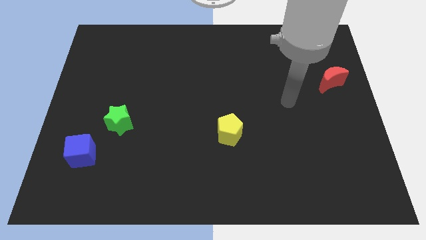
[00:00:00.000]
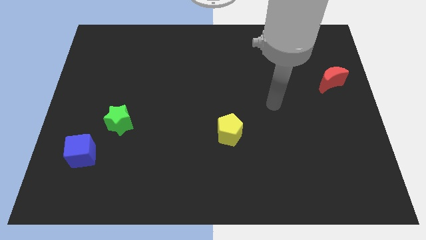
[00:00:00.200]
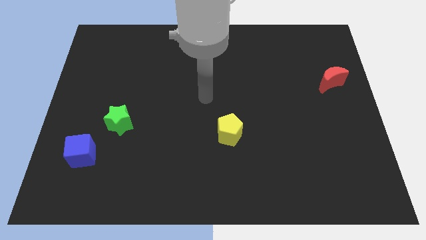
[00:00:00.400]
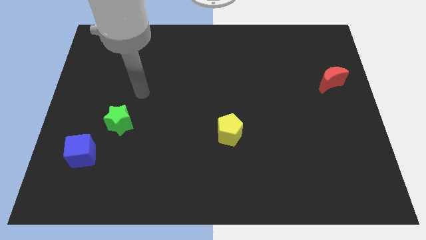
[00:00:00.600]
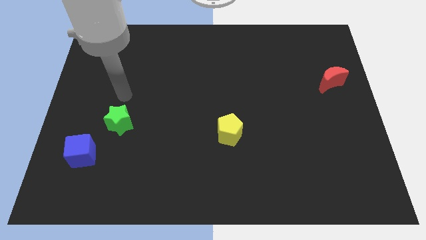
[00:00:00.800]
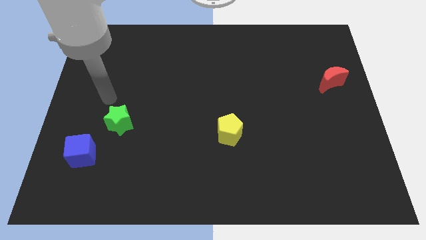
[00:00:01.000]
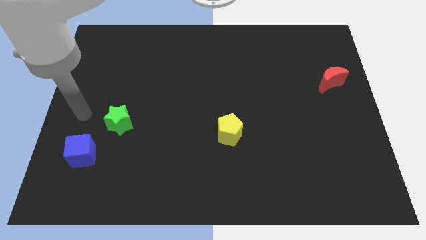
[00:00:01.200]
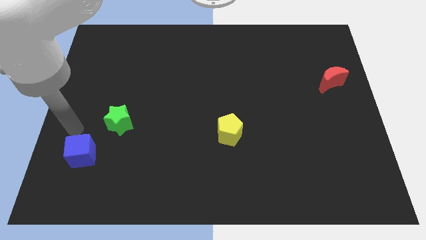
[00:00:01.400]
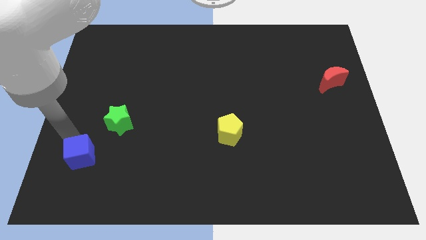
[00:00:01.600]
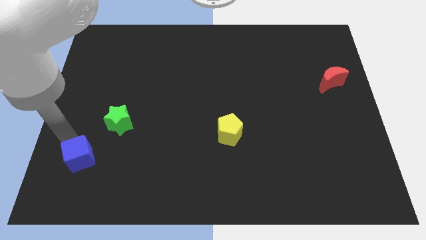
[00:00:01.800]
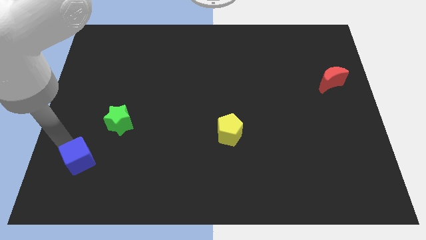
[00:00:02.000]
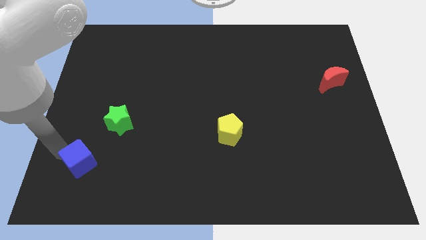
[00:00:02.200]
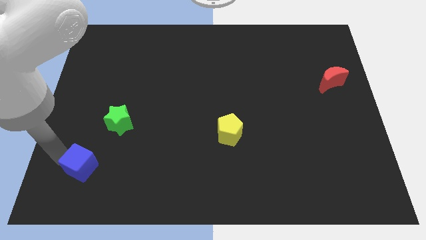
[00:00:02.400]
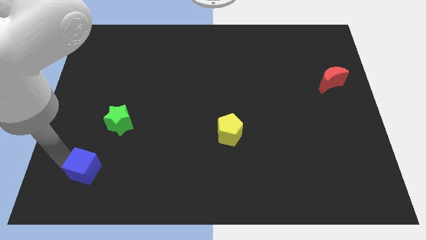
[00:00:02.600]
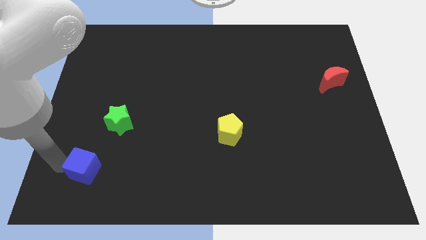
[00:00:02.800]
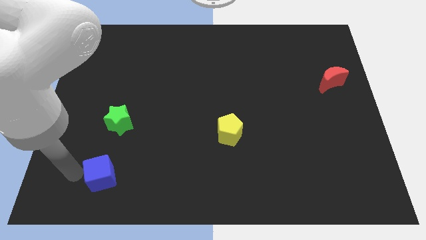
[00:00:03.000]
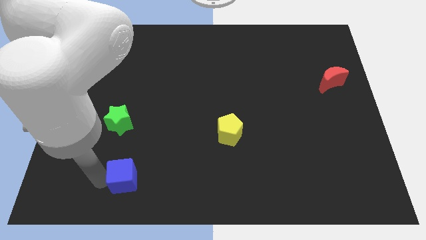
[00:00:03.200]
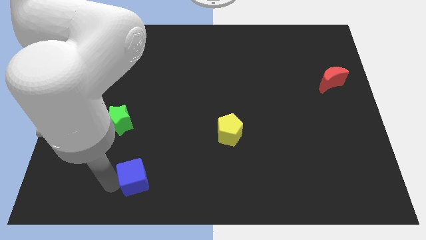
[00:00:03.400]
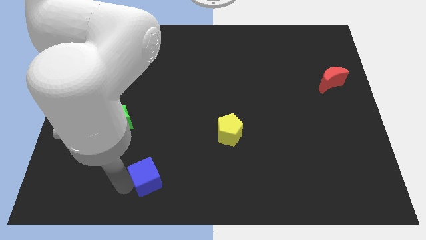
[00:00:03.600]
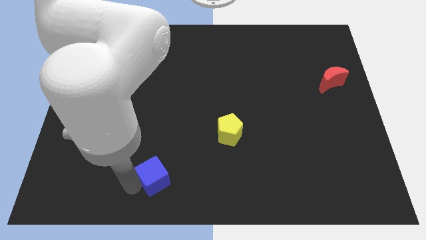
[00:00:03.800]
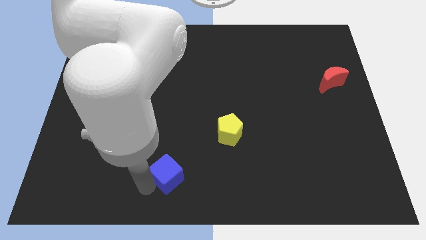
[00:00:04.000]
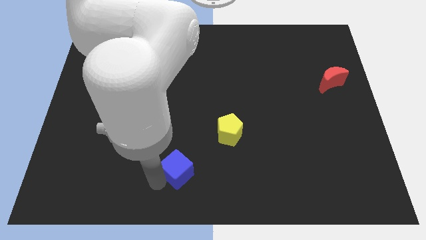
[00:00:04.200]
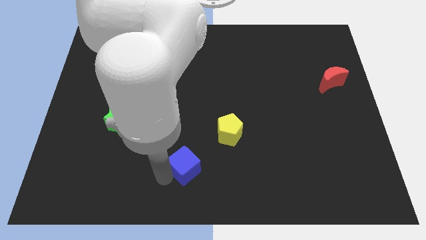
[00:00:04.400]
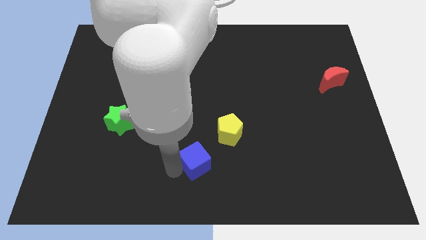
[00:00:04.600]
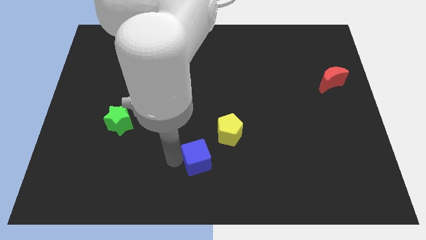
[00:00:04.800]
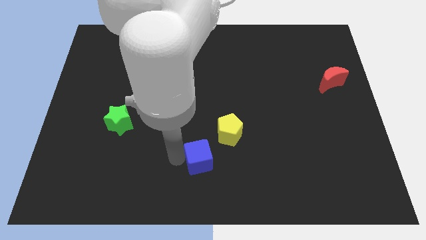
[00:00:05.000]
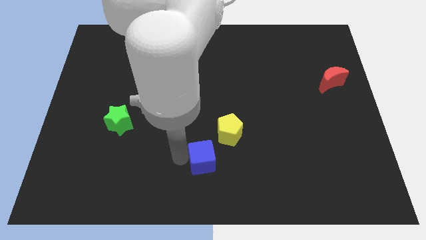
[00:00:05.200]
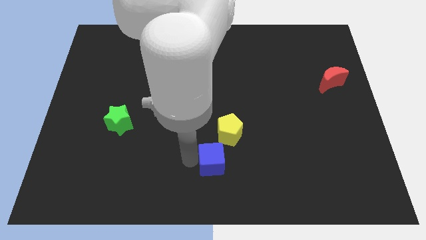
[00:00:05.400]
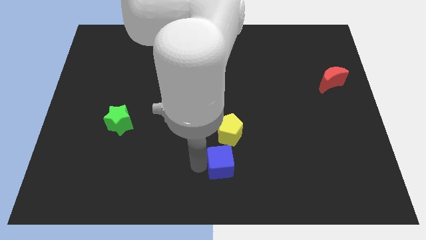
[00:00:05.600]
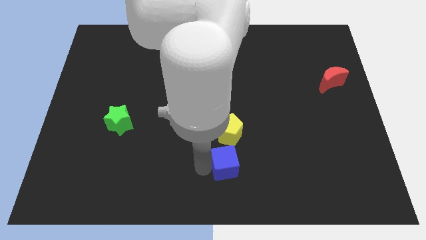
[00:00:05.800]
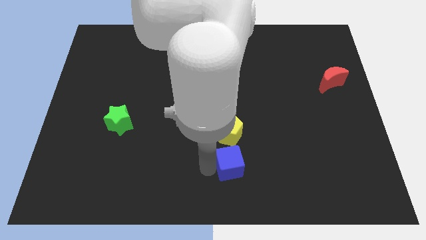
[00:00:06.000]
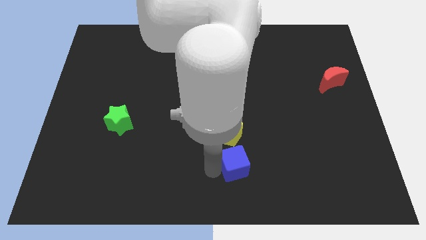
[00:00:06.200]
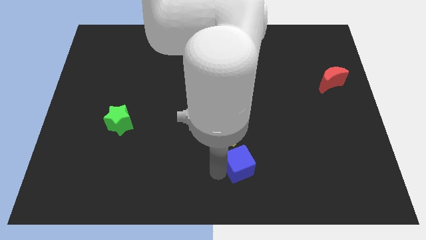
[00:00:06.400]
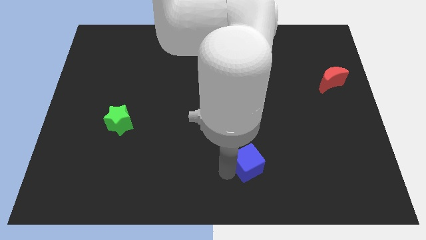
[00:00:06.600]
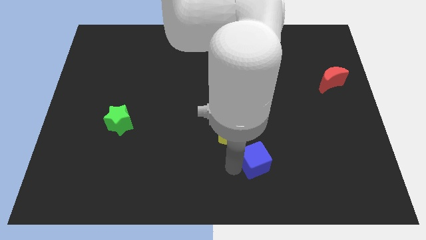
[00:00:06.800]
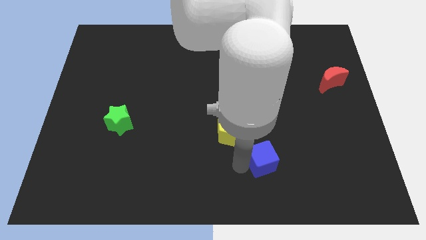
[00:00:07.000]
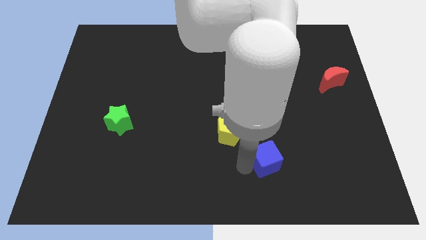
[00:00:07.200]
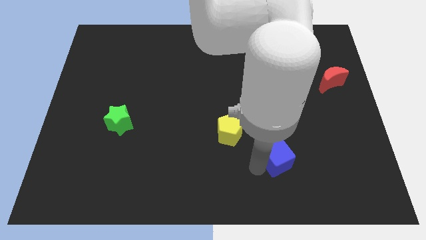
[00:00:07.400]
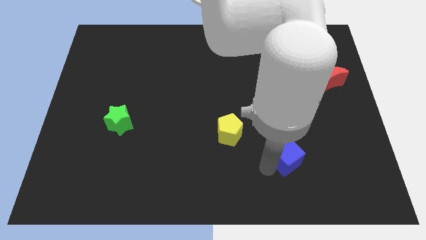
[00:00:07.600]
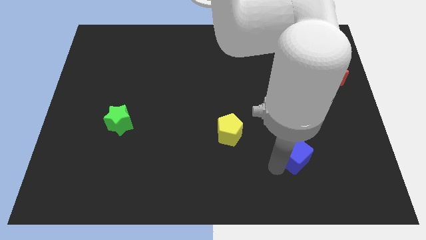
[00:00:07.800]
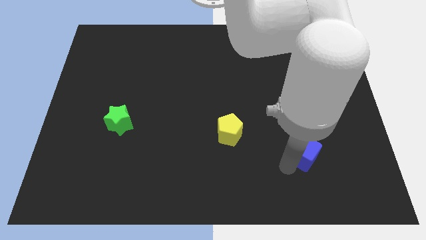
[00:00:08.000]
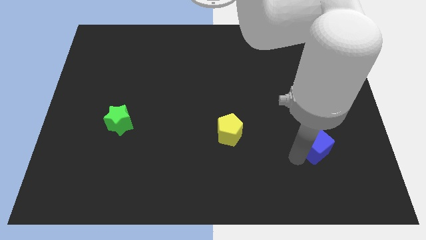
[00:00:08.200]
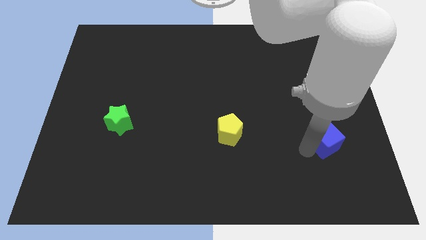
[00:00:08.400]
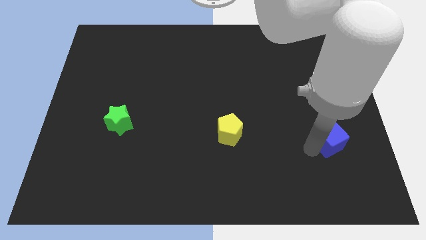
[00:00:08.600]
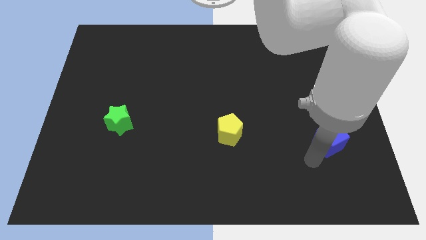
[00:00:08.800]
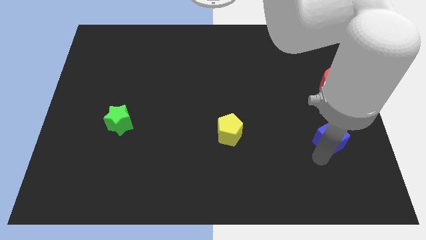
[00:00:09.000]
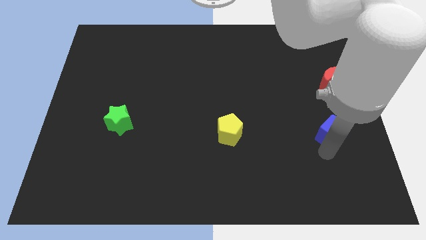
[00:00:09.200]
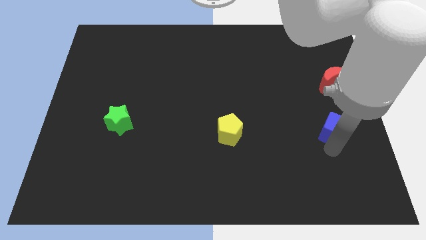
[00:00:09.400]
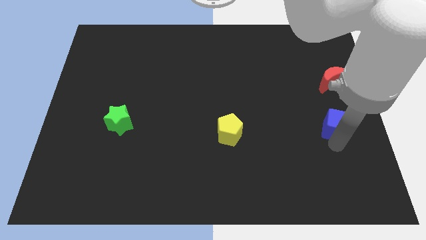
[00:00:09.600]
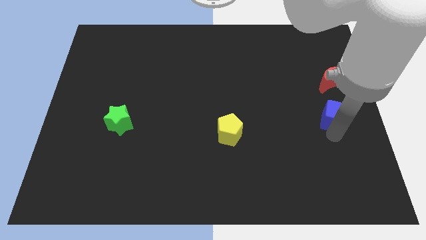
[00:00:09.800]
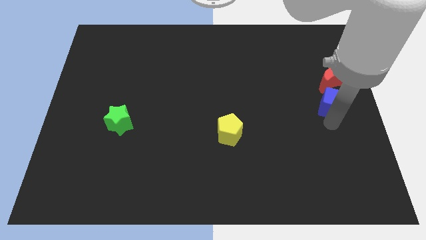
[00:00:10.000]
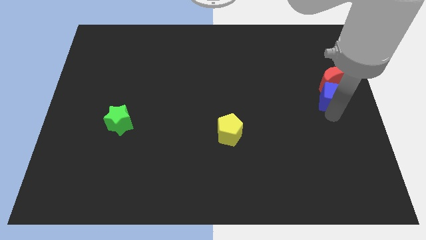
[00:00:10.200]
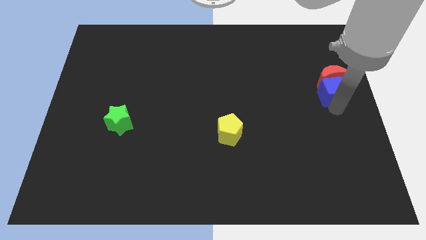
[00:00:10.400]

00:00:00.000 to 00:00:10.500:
push the blue block towards the red moon

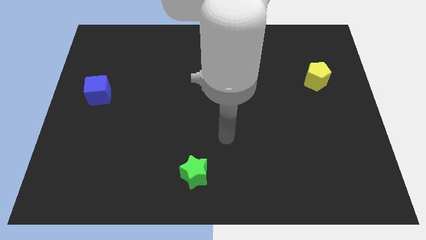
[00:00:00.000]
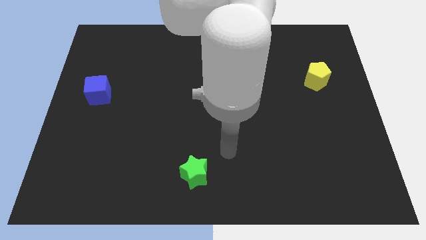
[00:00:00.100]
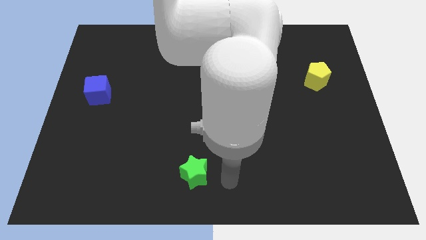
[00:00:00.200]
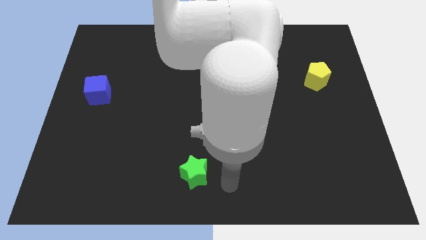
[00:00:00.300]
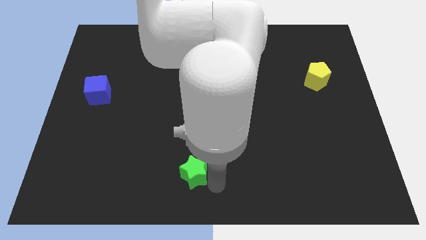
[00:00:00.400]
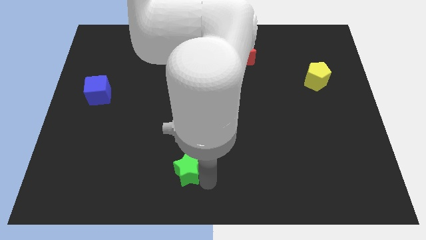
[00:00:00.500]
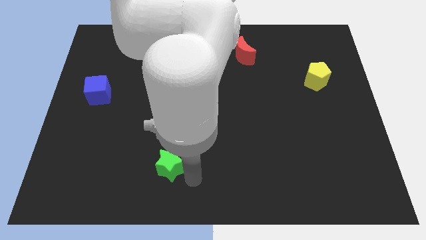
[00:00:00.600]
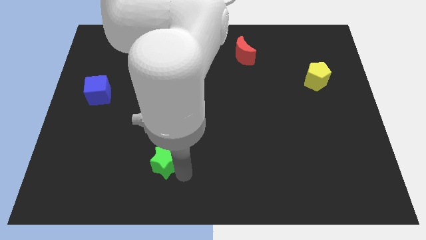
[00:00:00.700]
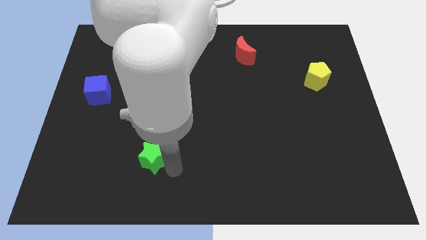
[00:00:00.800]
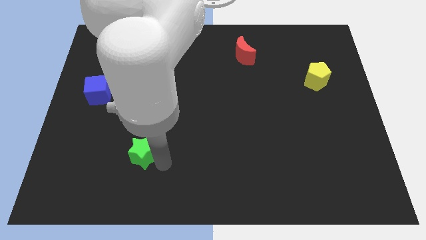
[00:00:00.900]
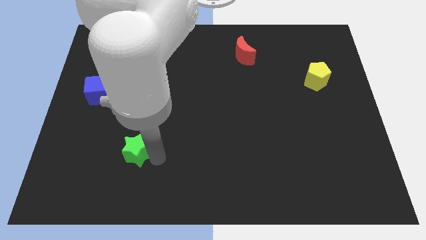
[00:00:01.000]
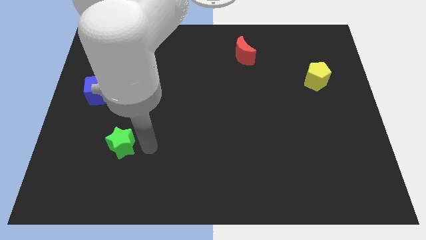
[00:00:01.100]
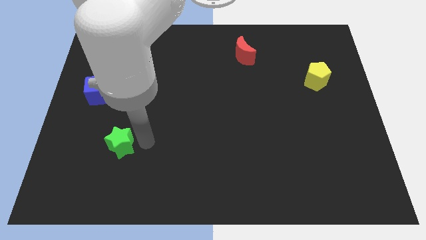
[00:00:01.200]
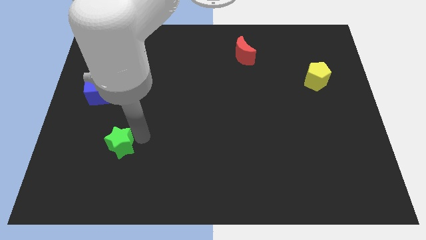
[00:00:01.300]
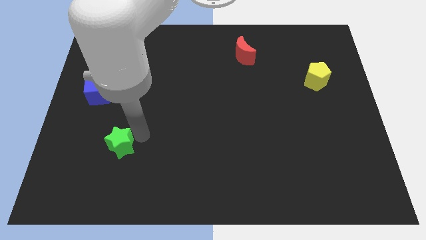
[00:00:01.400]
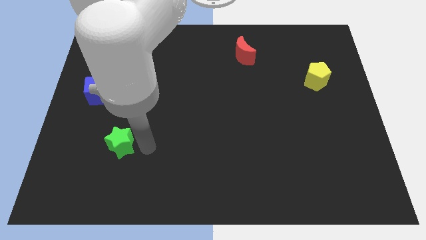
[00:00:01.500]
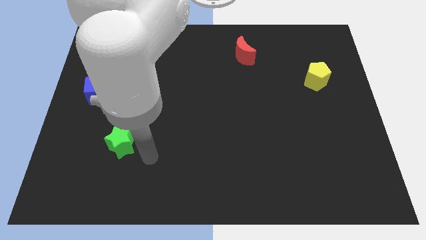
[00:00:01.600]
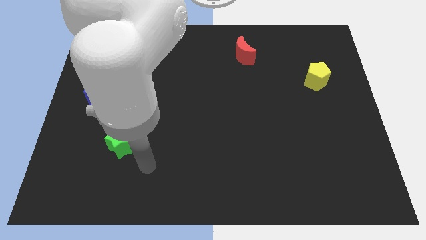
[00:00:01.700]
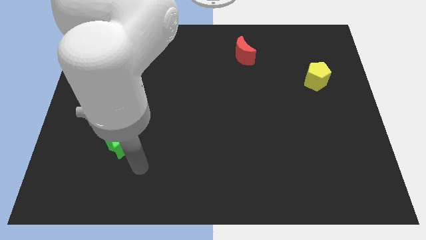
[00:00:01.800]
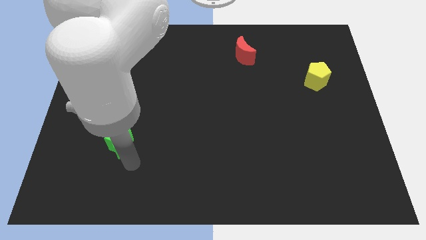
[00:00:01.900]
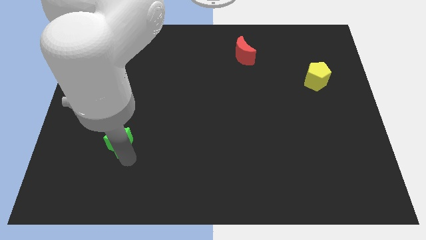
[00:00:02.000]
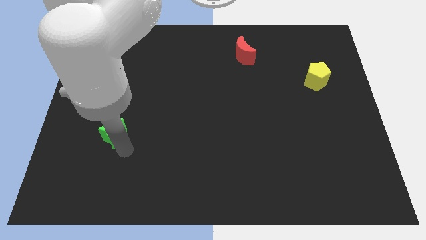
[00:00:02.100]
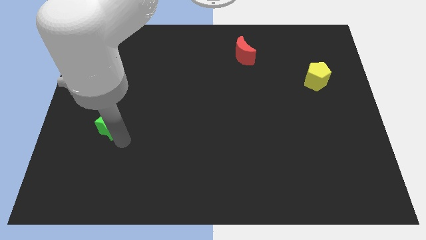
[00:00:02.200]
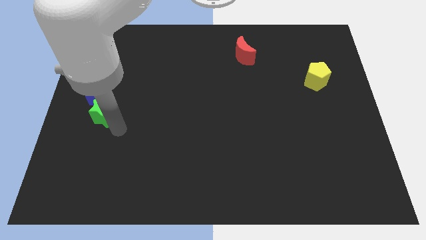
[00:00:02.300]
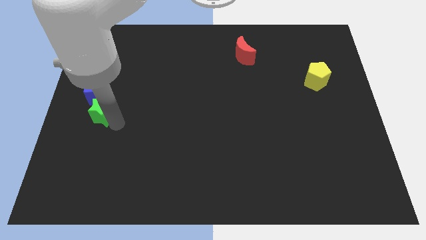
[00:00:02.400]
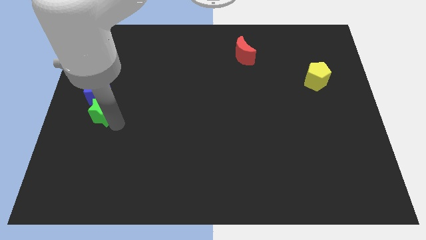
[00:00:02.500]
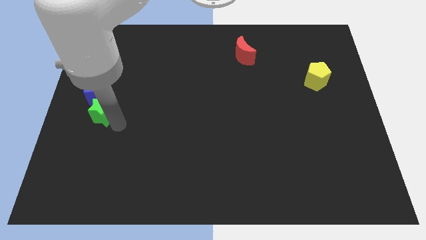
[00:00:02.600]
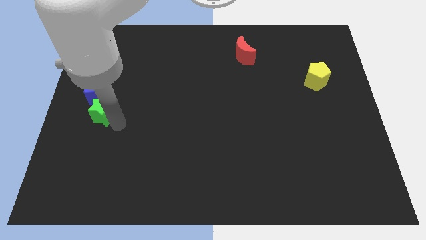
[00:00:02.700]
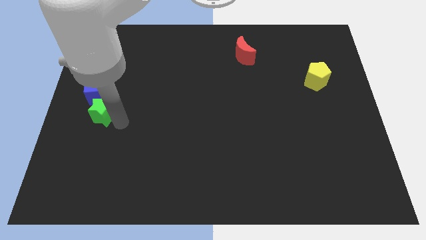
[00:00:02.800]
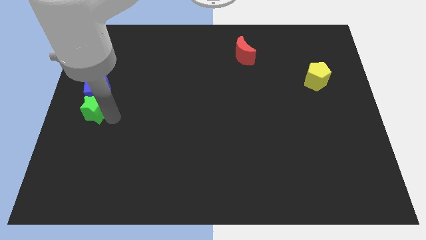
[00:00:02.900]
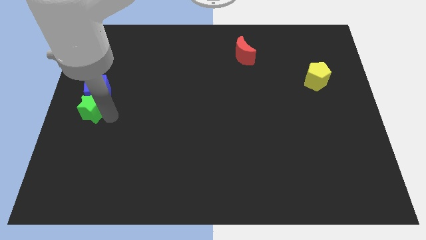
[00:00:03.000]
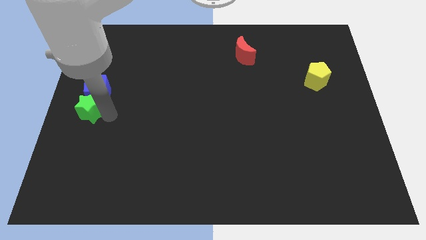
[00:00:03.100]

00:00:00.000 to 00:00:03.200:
move the green star next to the blue cube

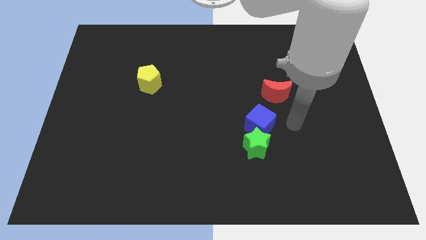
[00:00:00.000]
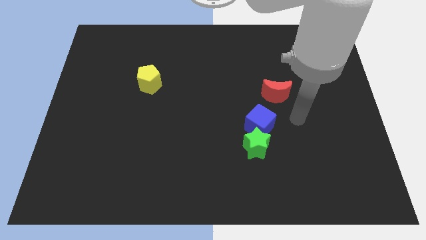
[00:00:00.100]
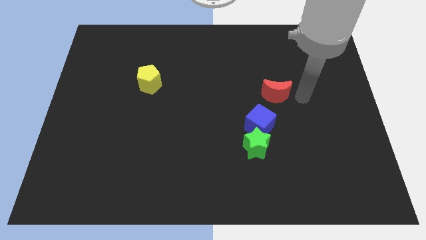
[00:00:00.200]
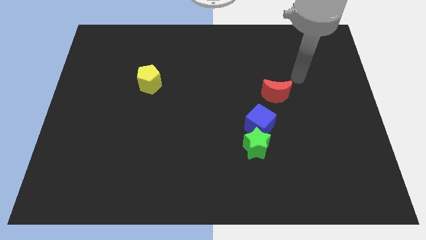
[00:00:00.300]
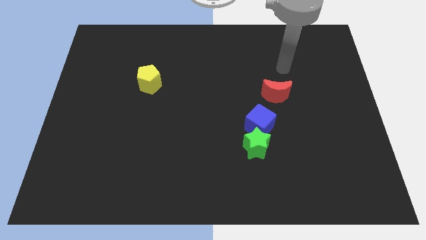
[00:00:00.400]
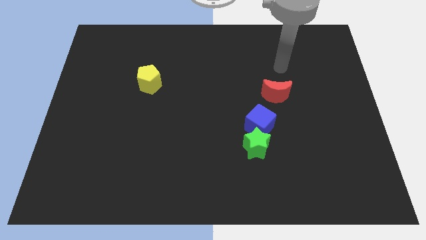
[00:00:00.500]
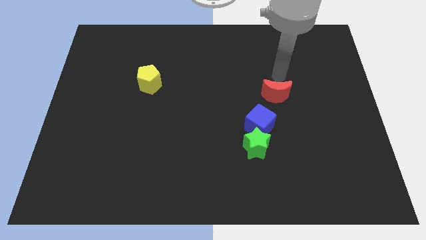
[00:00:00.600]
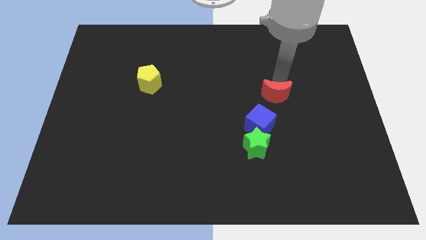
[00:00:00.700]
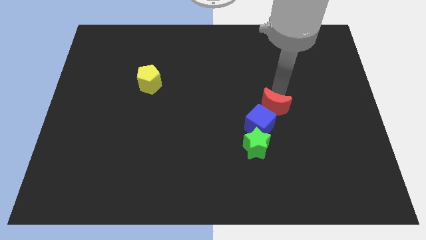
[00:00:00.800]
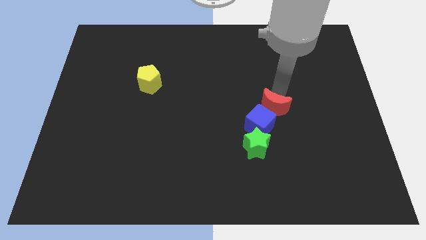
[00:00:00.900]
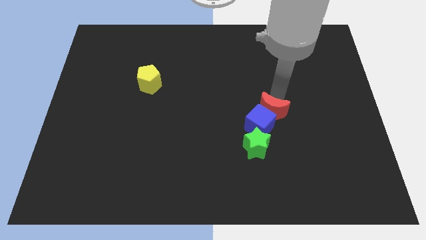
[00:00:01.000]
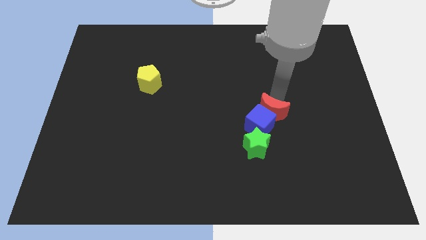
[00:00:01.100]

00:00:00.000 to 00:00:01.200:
move the red block towards the blue cube
